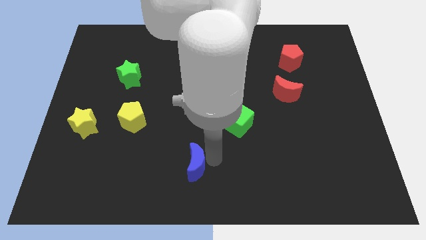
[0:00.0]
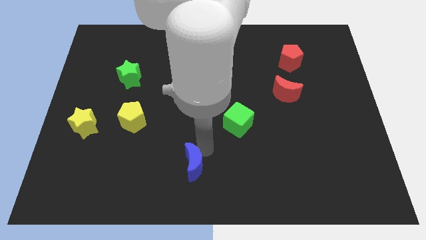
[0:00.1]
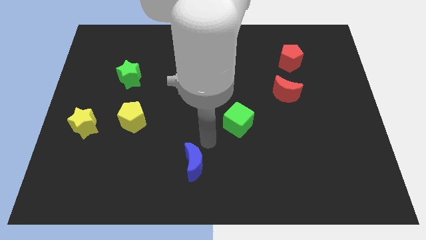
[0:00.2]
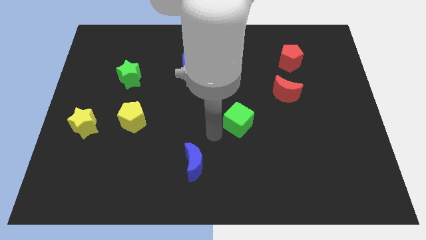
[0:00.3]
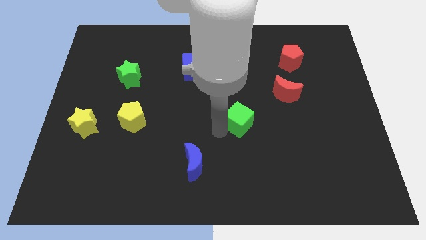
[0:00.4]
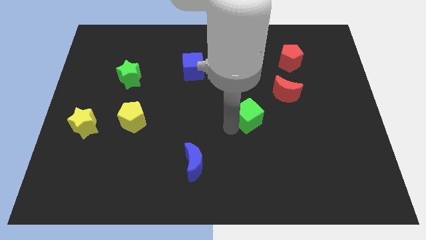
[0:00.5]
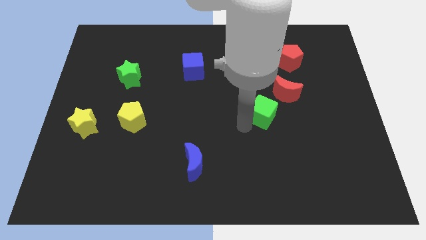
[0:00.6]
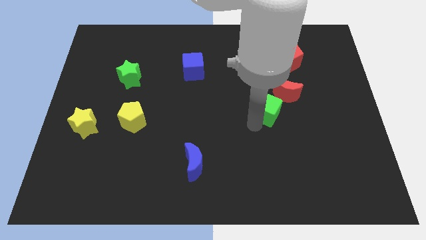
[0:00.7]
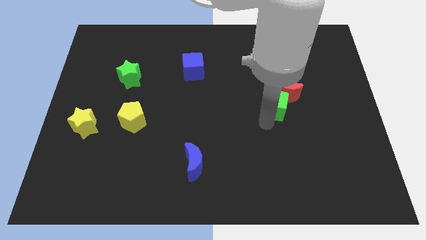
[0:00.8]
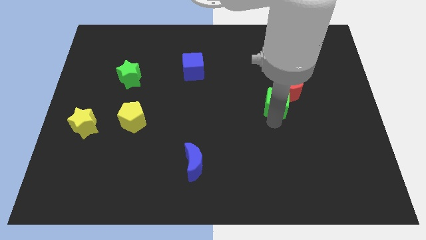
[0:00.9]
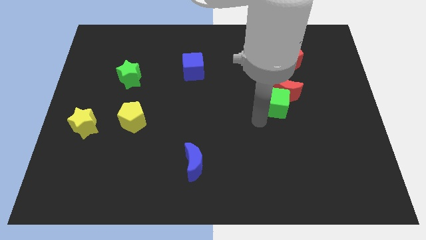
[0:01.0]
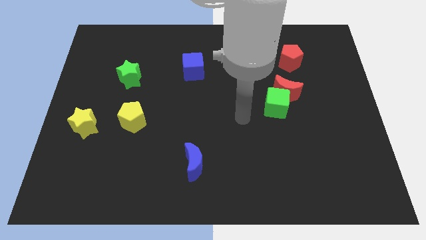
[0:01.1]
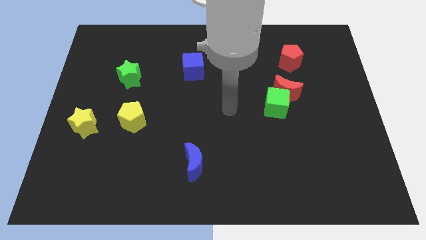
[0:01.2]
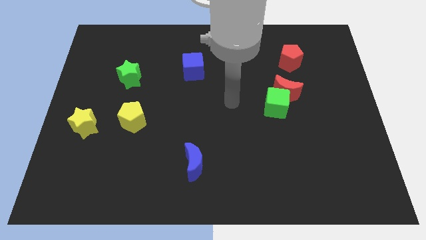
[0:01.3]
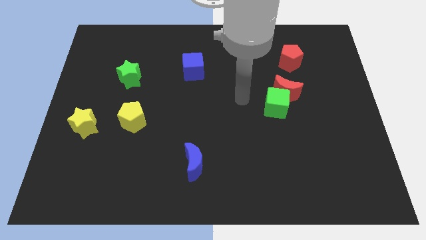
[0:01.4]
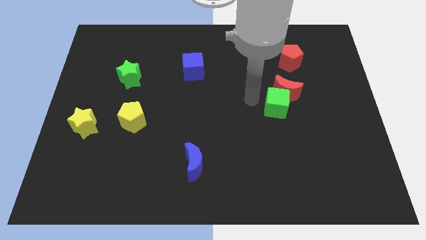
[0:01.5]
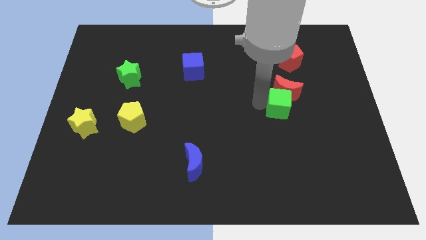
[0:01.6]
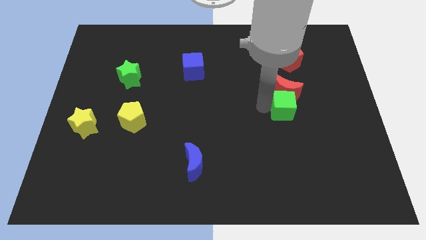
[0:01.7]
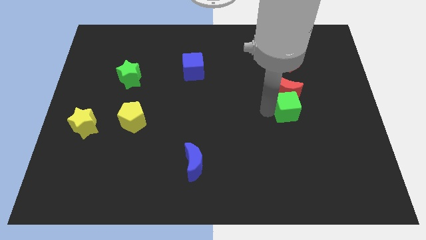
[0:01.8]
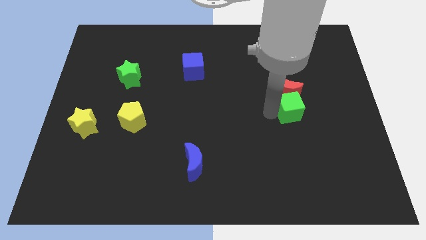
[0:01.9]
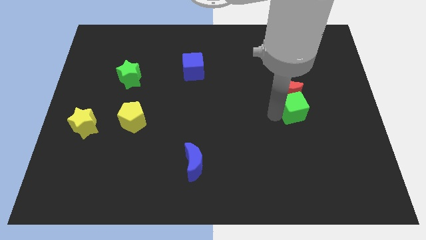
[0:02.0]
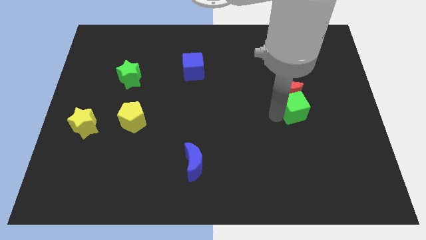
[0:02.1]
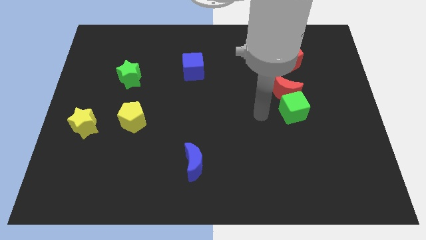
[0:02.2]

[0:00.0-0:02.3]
place the green cube below the red moon

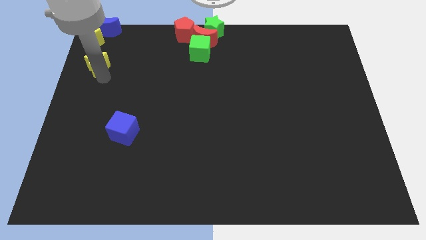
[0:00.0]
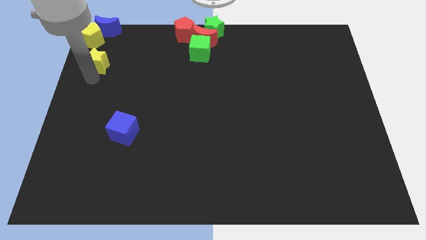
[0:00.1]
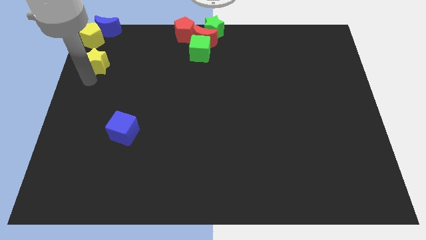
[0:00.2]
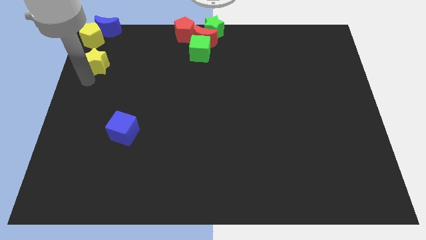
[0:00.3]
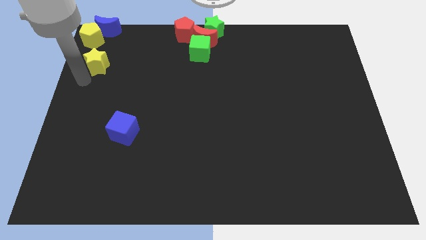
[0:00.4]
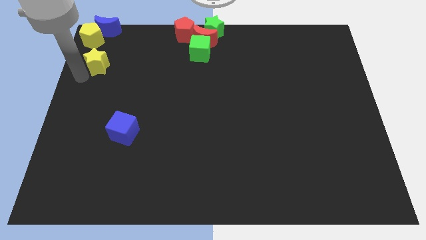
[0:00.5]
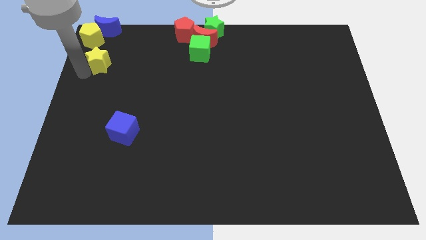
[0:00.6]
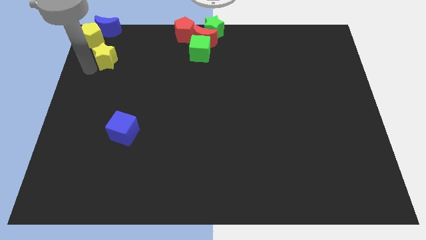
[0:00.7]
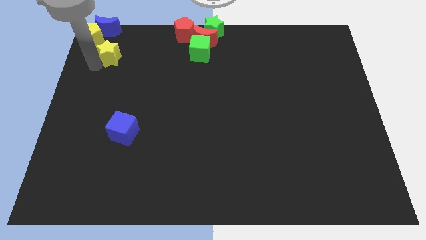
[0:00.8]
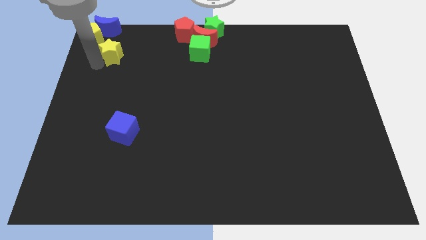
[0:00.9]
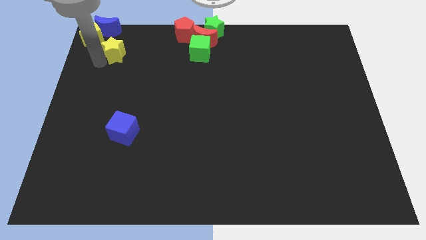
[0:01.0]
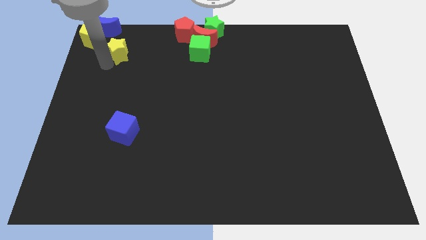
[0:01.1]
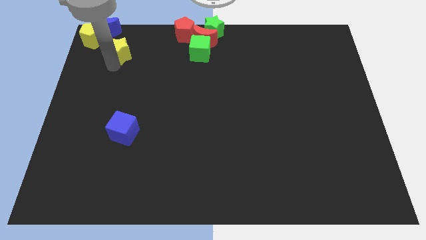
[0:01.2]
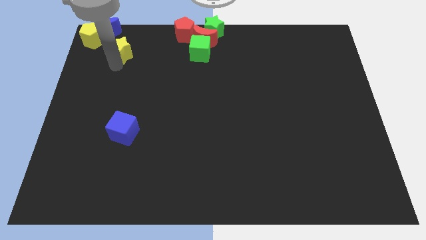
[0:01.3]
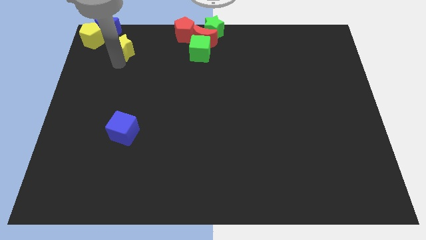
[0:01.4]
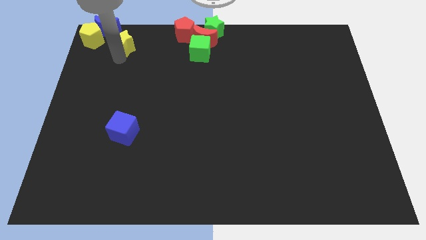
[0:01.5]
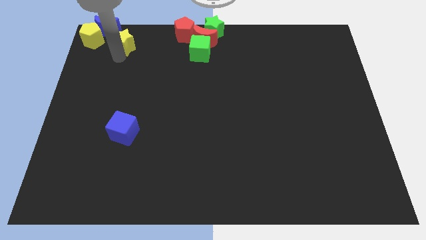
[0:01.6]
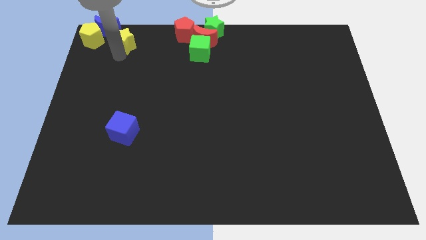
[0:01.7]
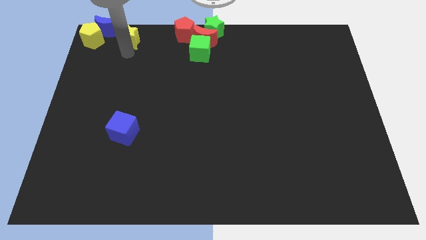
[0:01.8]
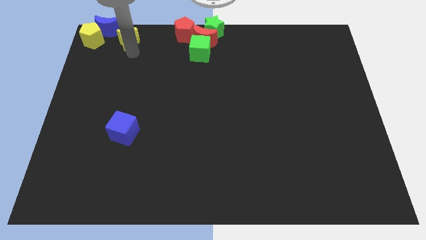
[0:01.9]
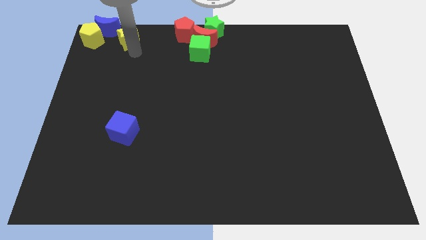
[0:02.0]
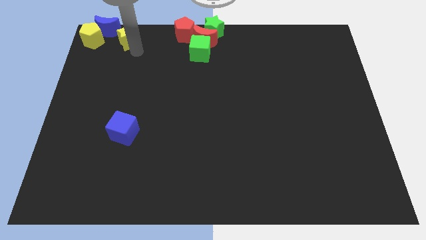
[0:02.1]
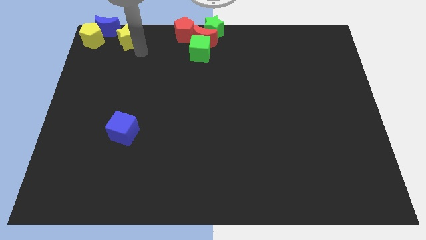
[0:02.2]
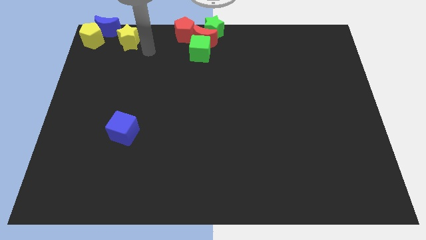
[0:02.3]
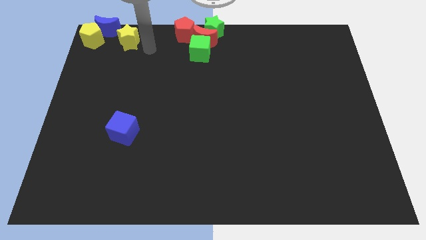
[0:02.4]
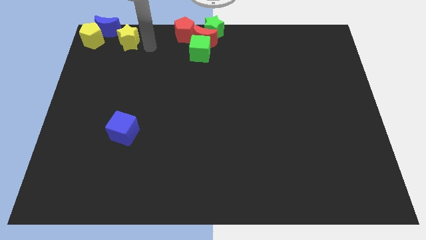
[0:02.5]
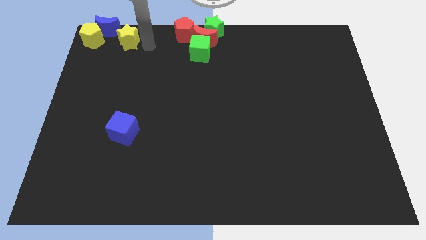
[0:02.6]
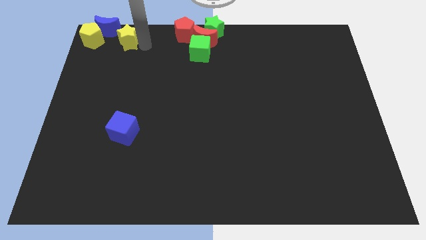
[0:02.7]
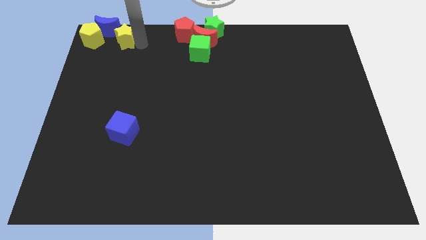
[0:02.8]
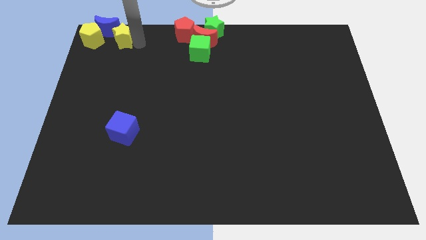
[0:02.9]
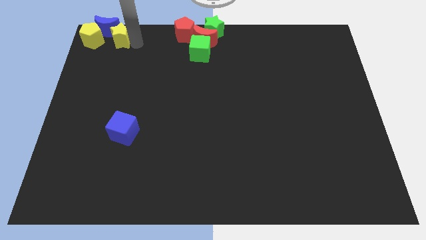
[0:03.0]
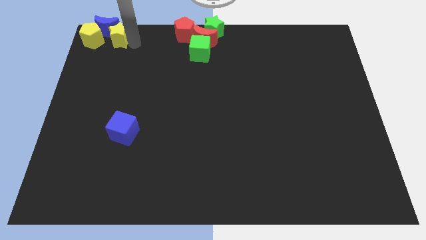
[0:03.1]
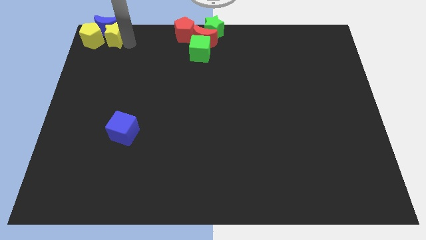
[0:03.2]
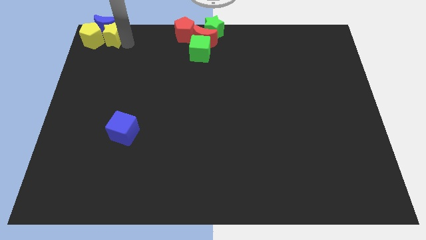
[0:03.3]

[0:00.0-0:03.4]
group up the yellow blocks at the top left corner of the board

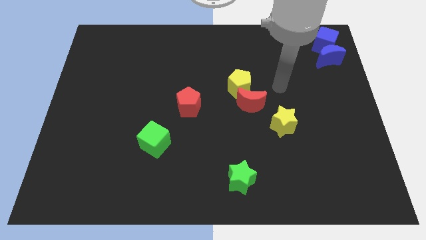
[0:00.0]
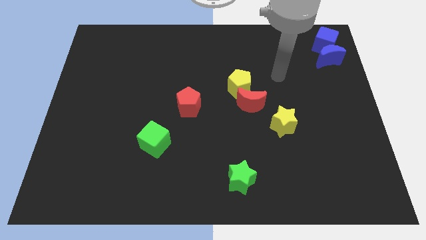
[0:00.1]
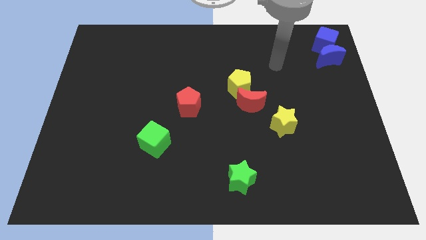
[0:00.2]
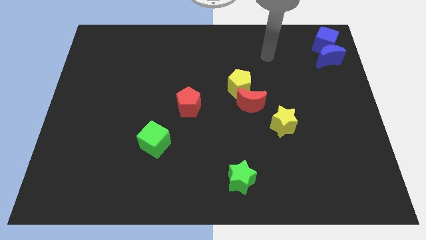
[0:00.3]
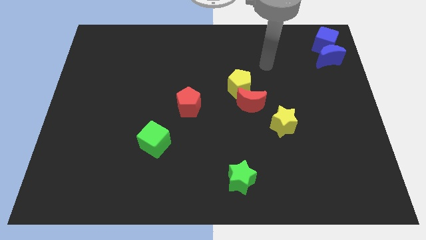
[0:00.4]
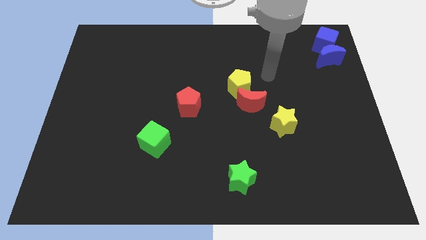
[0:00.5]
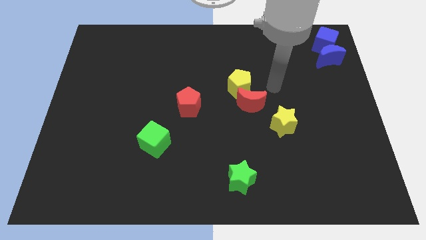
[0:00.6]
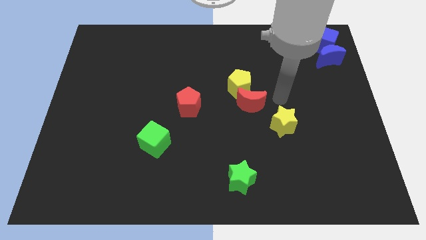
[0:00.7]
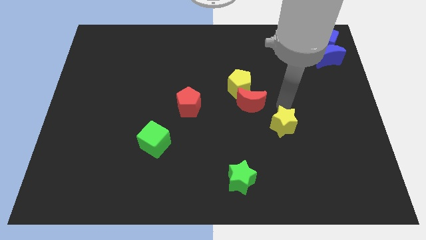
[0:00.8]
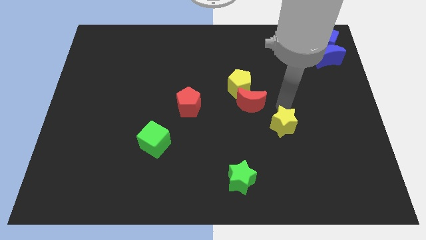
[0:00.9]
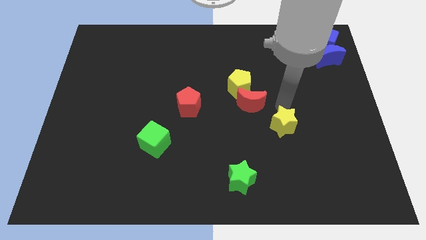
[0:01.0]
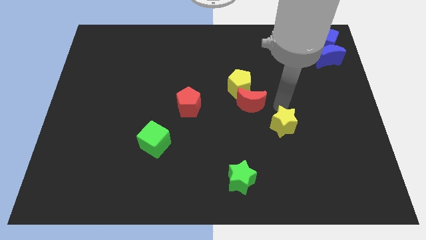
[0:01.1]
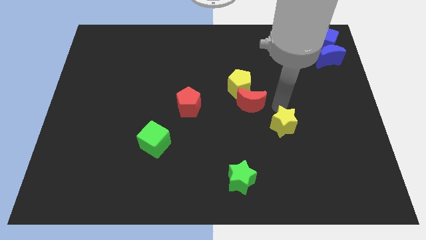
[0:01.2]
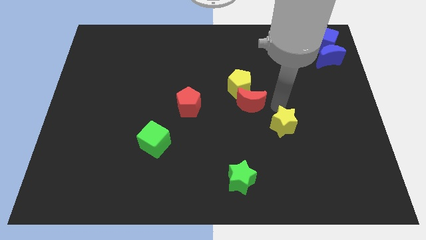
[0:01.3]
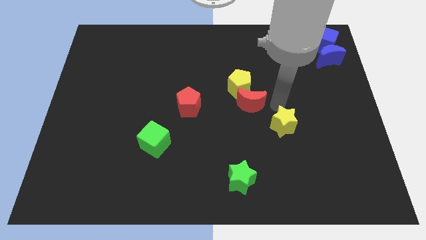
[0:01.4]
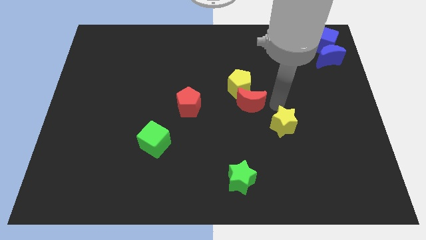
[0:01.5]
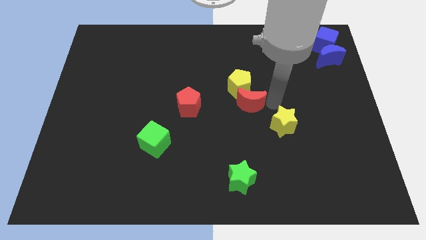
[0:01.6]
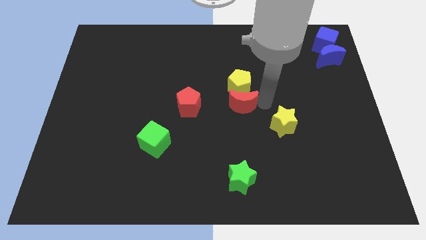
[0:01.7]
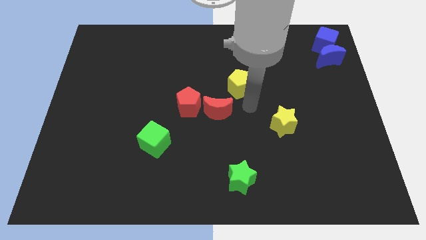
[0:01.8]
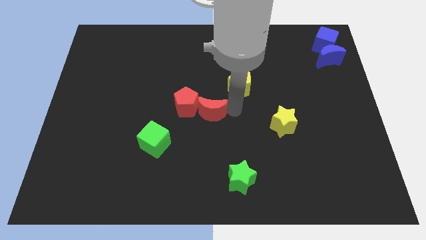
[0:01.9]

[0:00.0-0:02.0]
push the red moon into the red pentagon

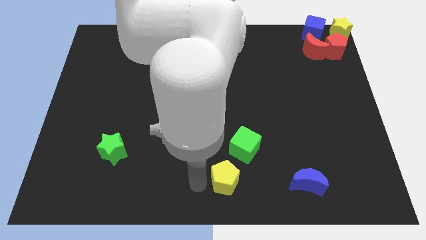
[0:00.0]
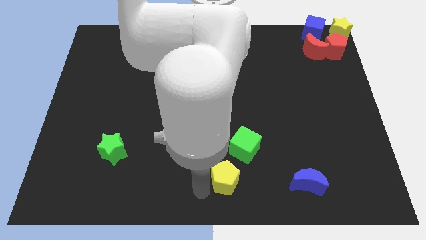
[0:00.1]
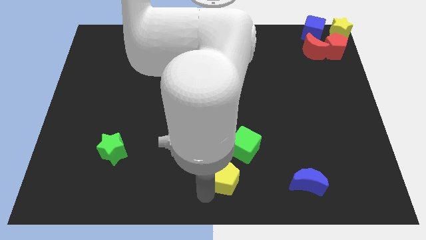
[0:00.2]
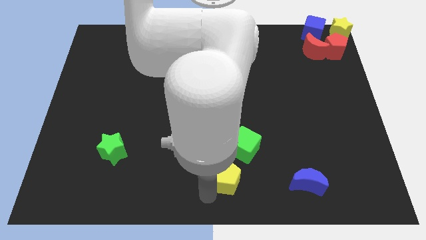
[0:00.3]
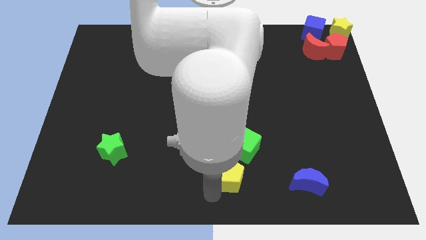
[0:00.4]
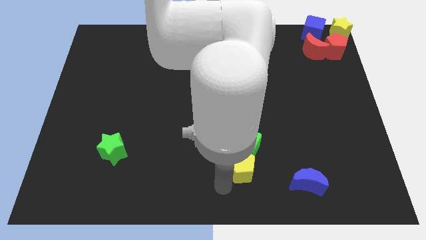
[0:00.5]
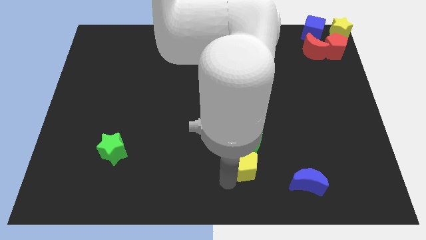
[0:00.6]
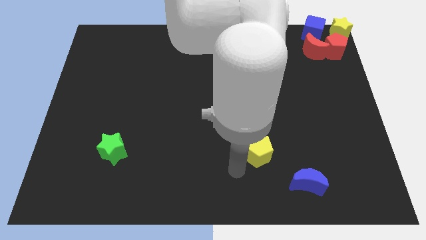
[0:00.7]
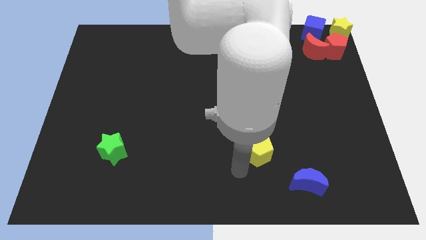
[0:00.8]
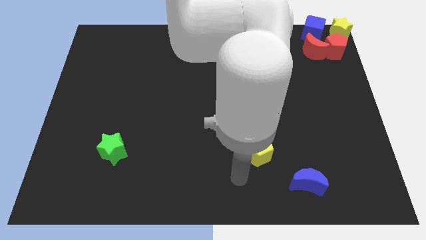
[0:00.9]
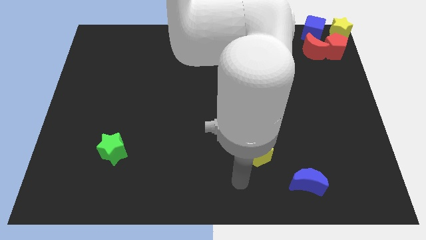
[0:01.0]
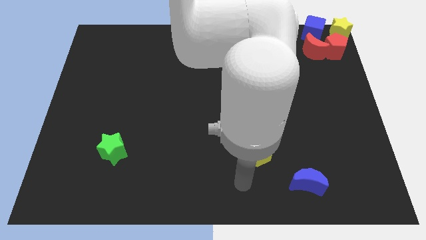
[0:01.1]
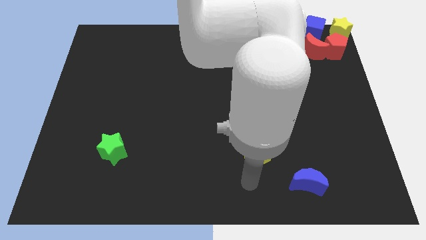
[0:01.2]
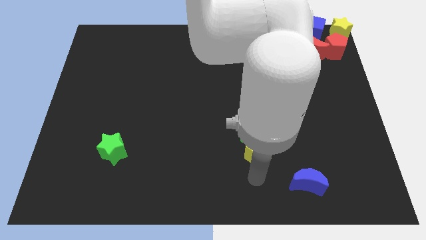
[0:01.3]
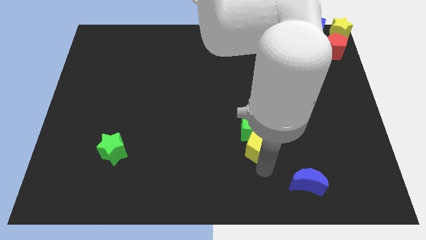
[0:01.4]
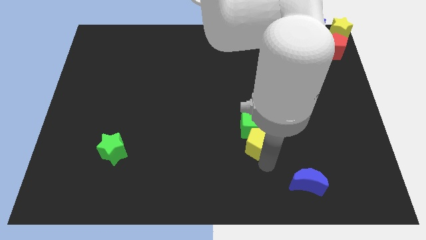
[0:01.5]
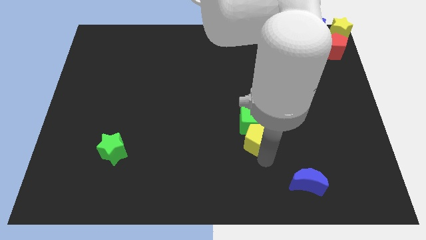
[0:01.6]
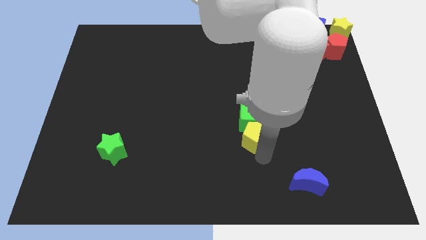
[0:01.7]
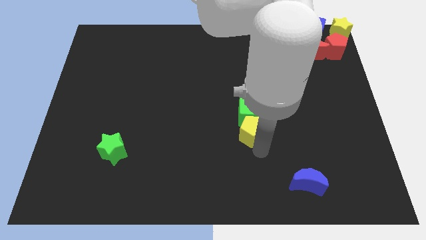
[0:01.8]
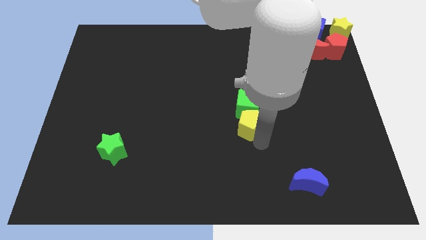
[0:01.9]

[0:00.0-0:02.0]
touch green cube with yellow pentagon
